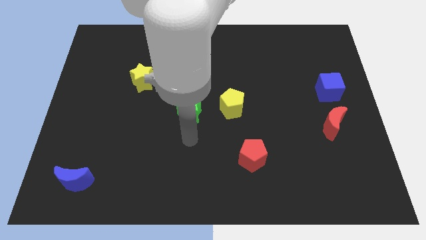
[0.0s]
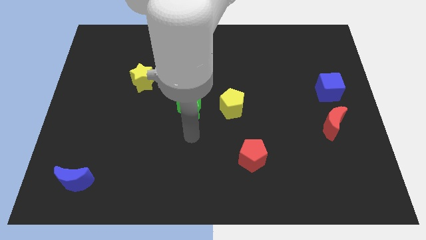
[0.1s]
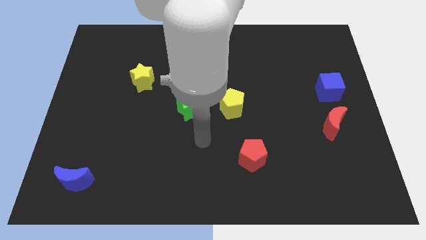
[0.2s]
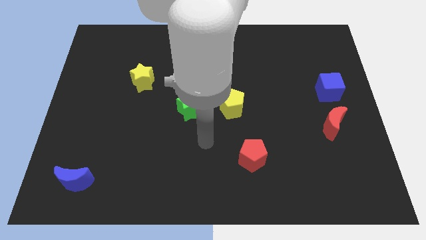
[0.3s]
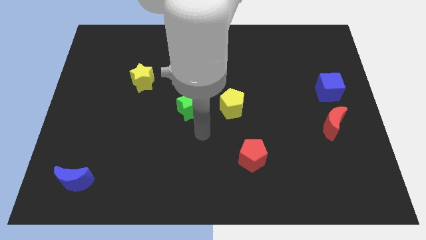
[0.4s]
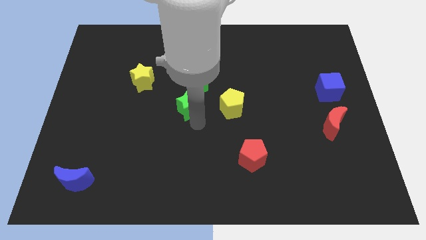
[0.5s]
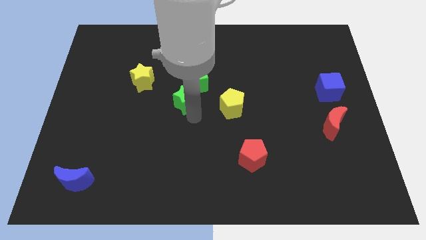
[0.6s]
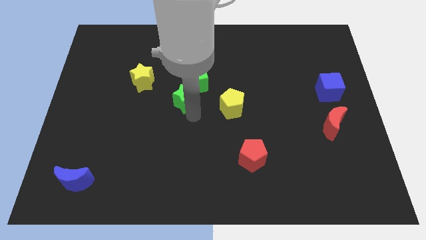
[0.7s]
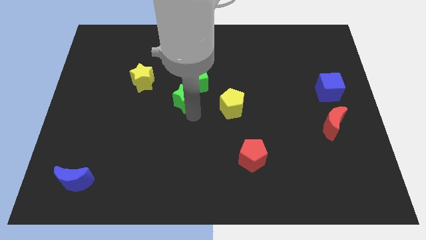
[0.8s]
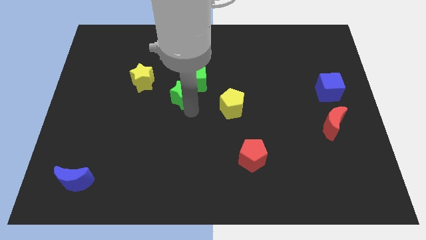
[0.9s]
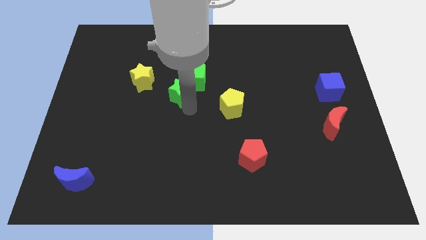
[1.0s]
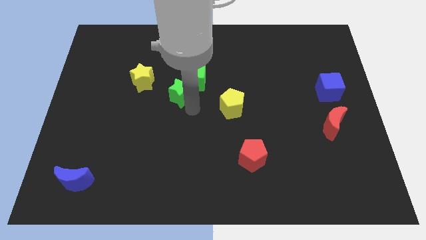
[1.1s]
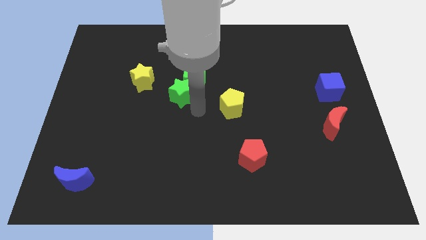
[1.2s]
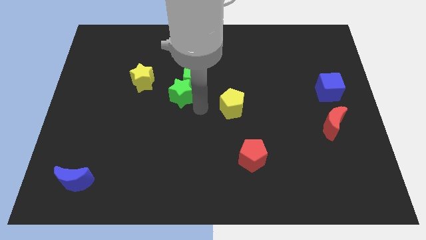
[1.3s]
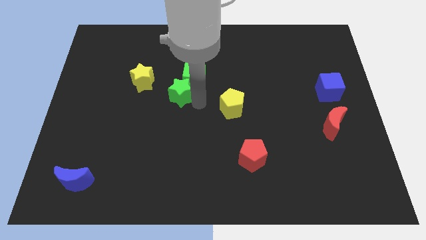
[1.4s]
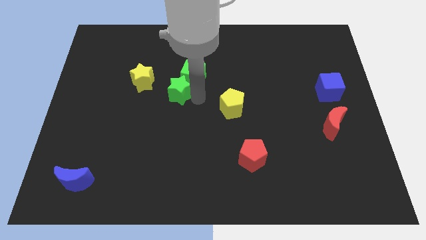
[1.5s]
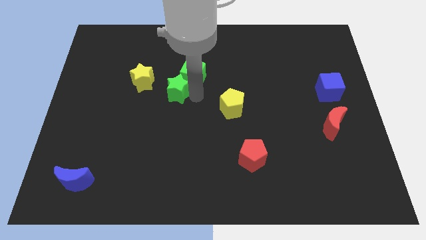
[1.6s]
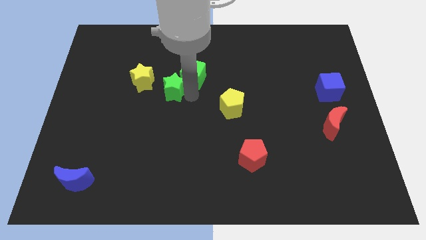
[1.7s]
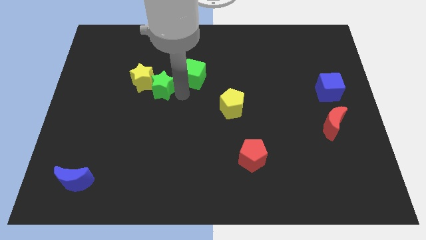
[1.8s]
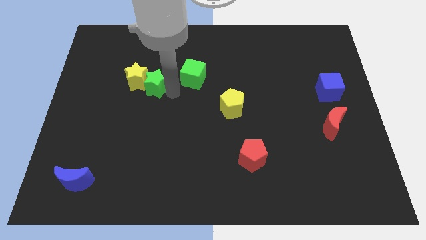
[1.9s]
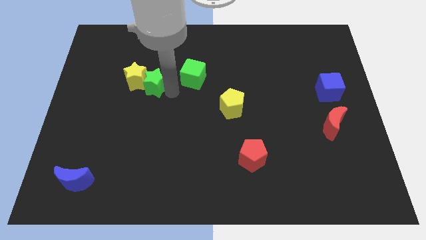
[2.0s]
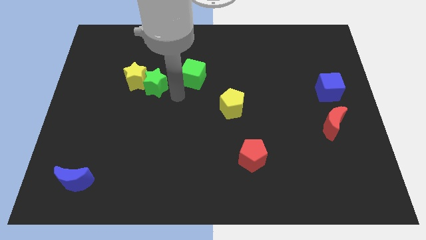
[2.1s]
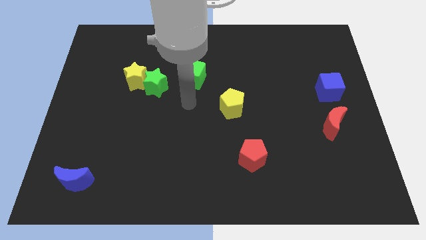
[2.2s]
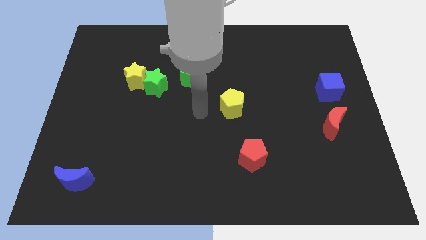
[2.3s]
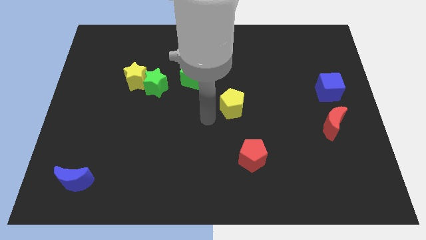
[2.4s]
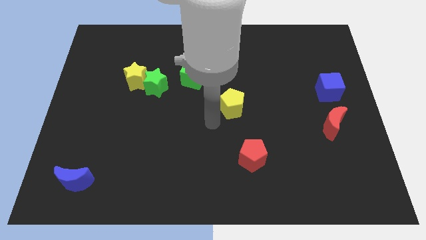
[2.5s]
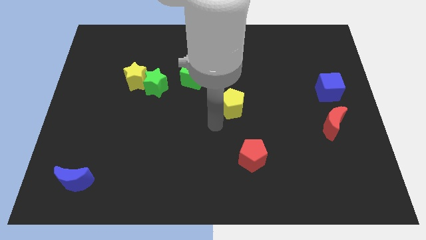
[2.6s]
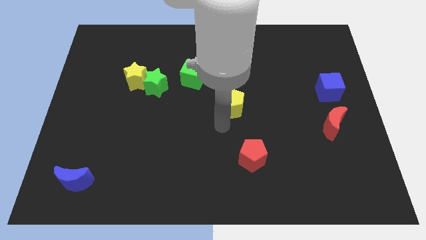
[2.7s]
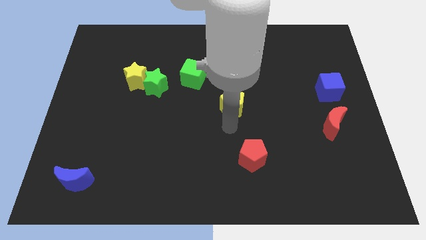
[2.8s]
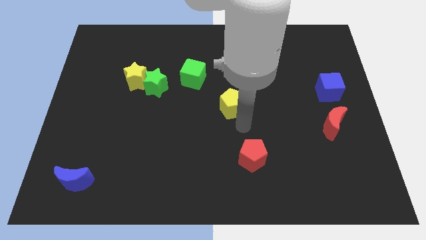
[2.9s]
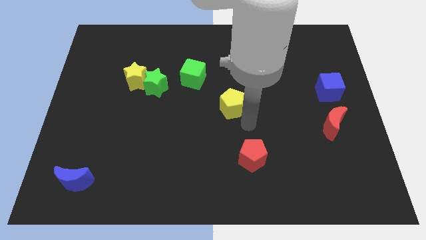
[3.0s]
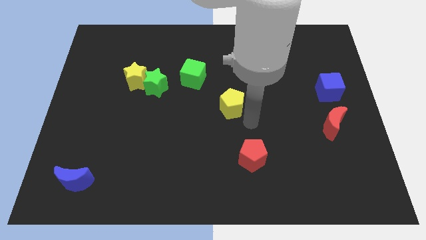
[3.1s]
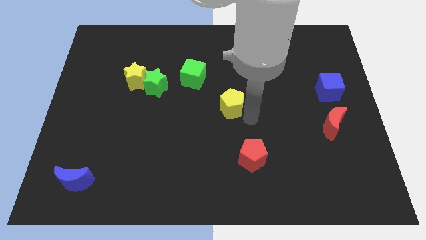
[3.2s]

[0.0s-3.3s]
move the green star to the right side of the yellow star

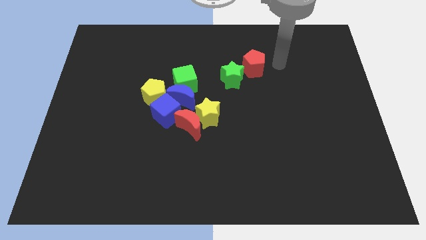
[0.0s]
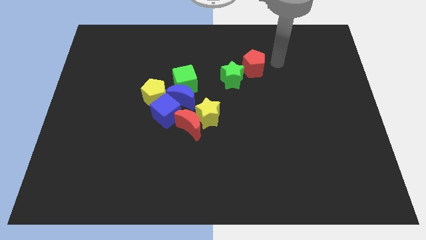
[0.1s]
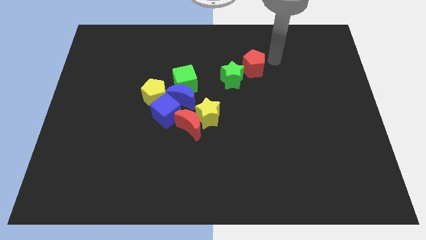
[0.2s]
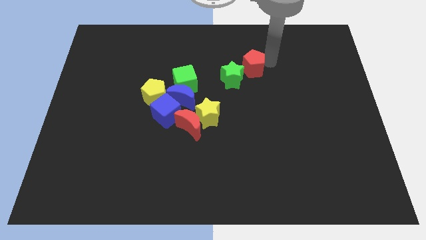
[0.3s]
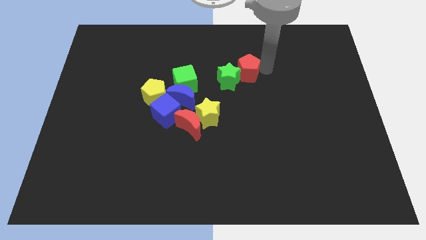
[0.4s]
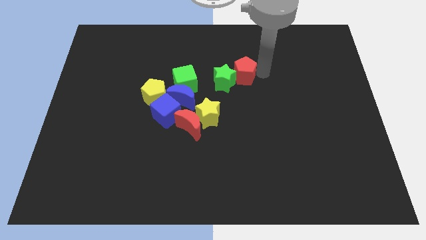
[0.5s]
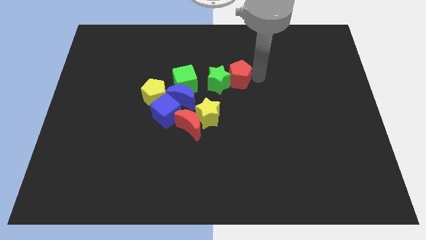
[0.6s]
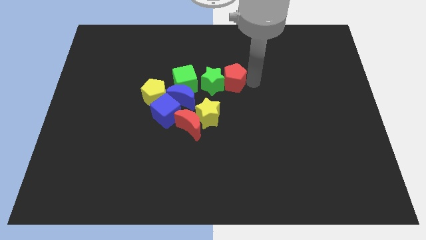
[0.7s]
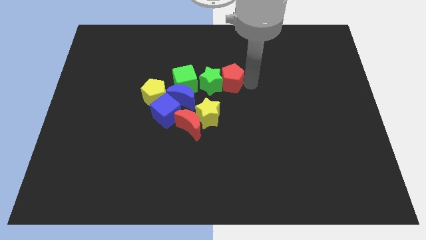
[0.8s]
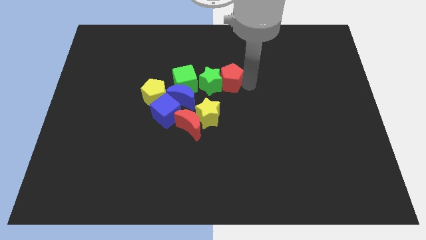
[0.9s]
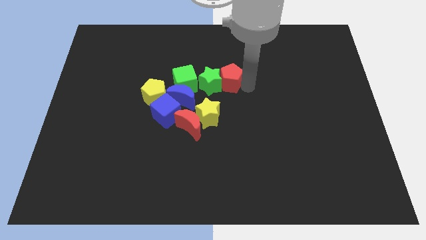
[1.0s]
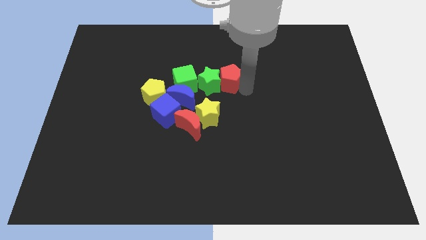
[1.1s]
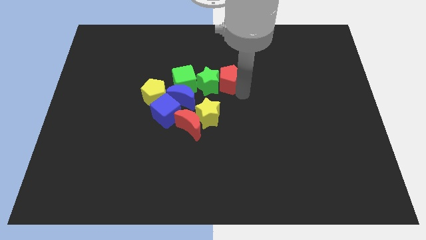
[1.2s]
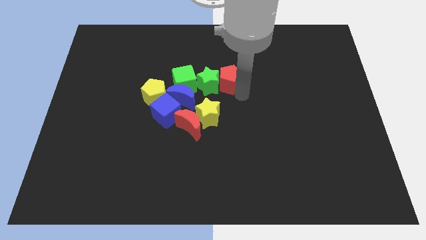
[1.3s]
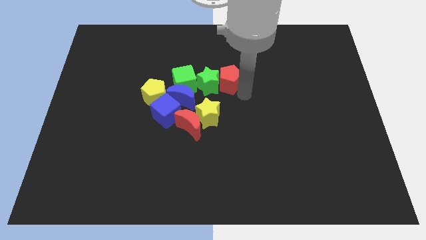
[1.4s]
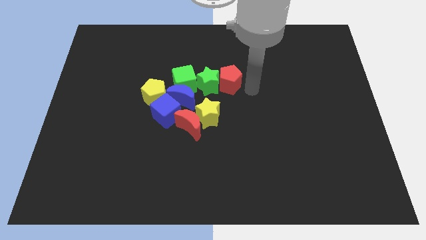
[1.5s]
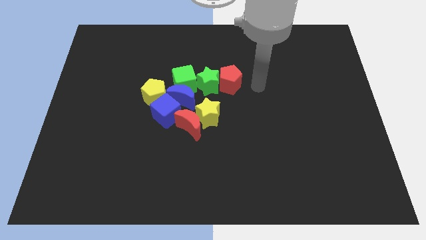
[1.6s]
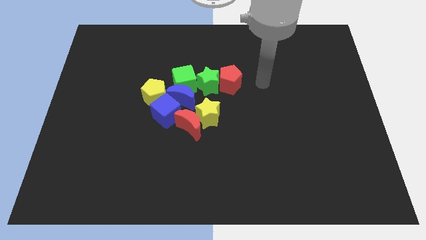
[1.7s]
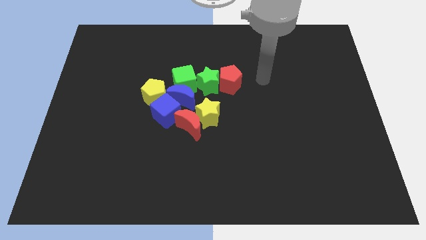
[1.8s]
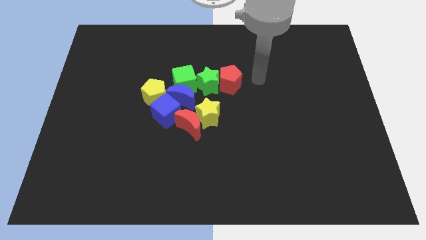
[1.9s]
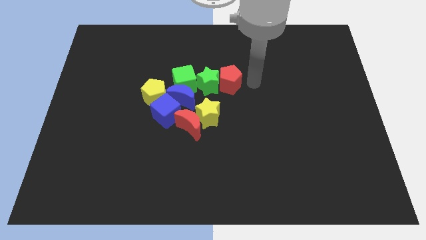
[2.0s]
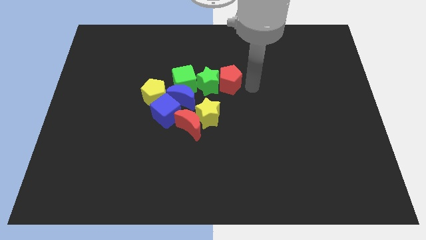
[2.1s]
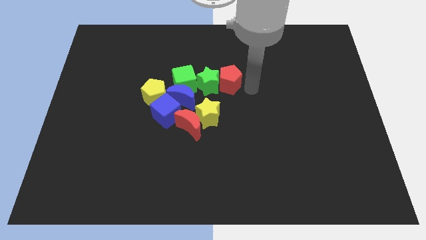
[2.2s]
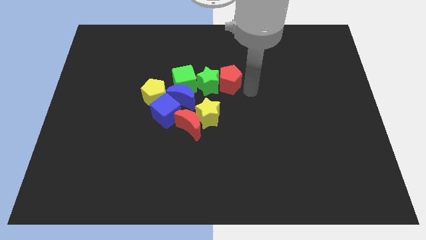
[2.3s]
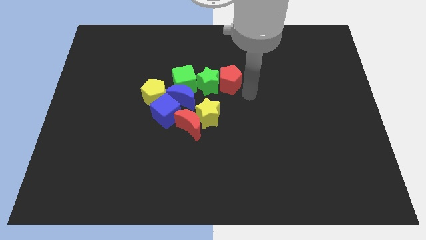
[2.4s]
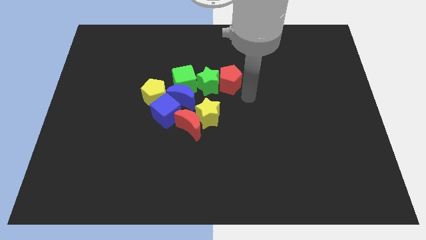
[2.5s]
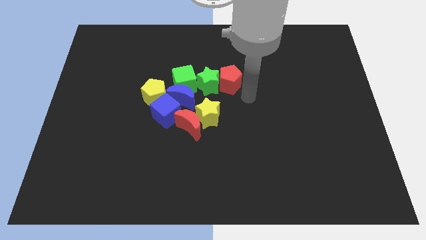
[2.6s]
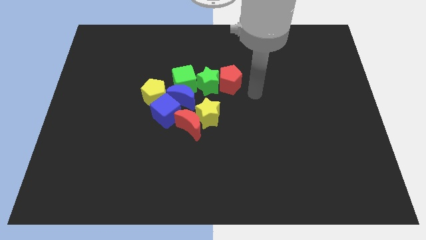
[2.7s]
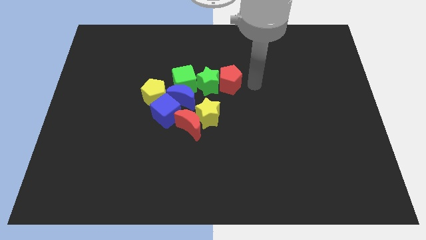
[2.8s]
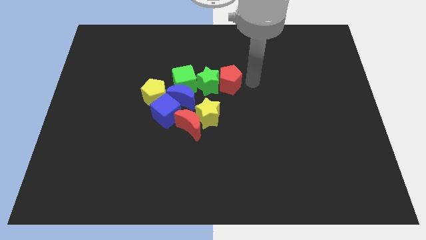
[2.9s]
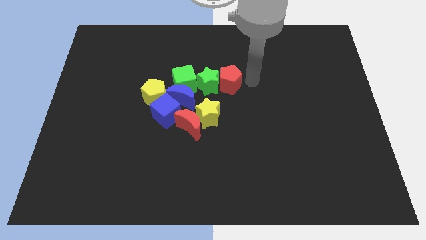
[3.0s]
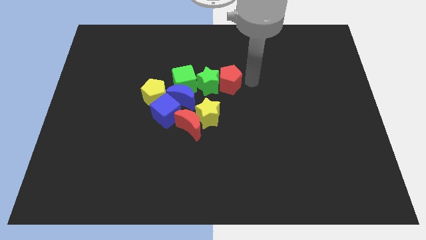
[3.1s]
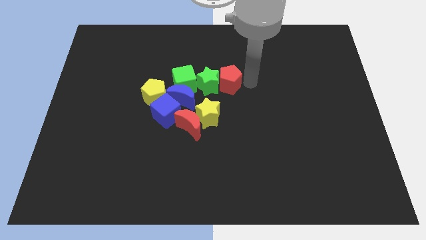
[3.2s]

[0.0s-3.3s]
move the green star and red pentagon to the right of the green cube

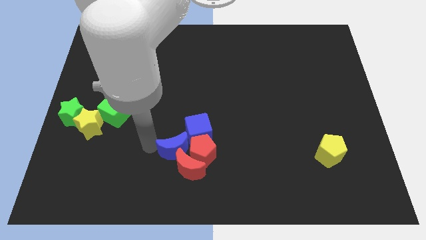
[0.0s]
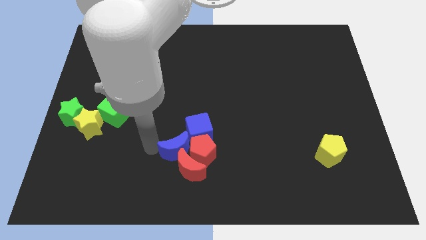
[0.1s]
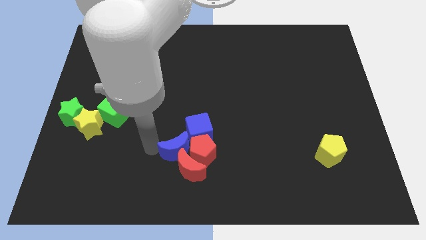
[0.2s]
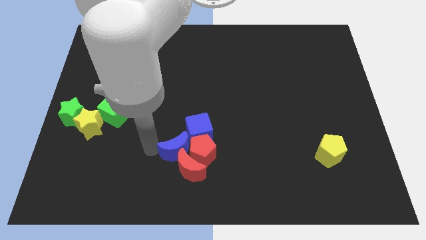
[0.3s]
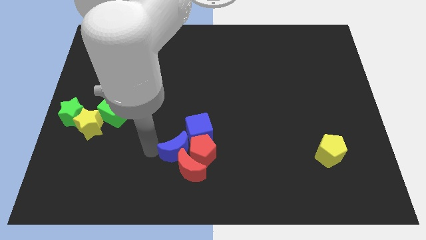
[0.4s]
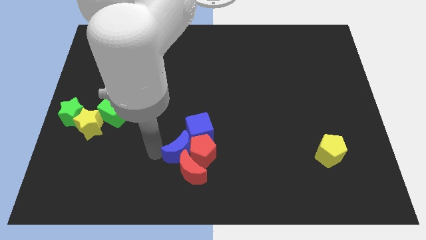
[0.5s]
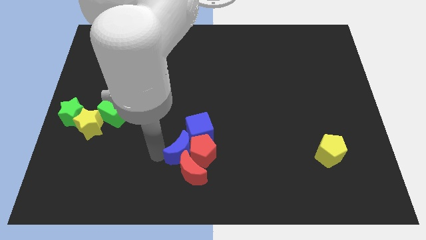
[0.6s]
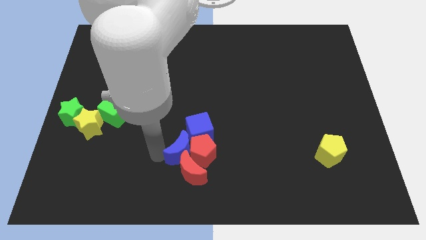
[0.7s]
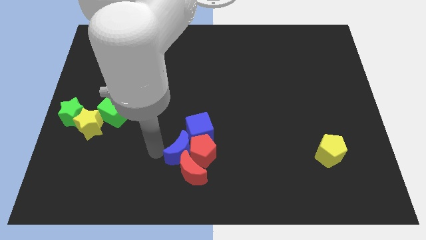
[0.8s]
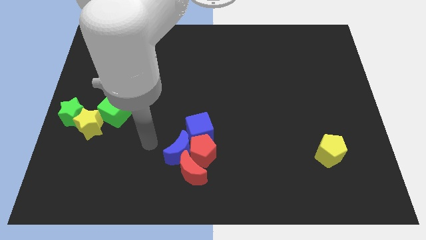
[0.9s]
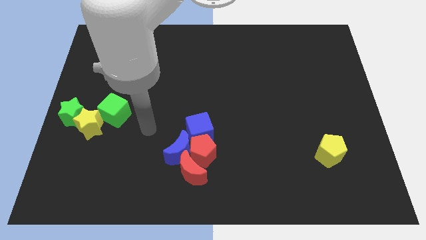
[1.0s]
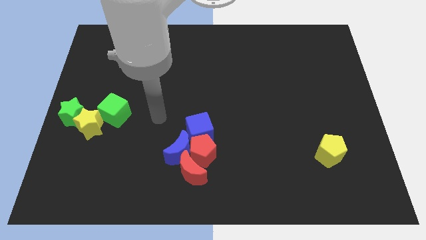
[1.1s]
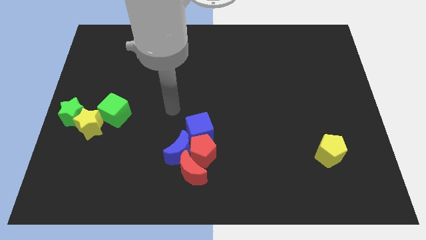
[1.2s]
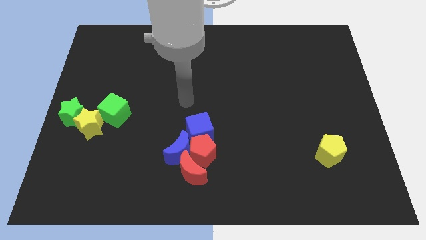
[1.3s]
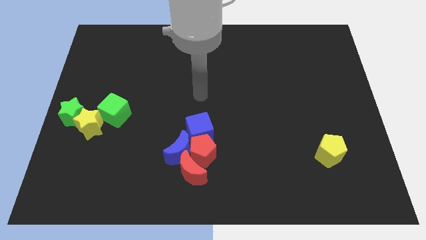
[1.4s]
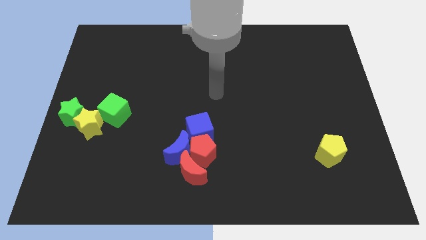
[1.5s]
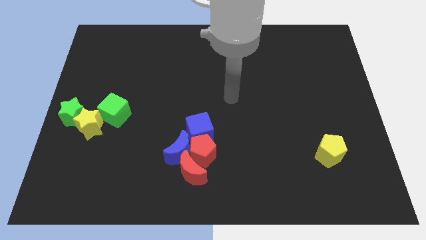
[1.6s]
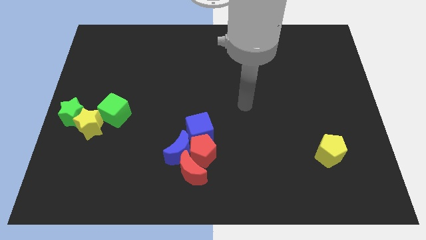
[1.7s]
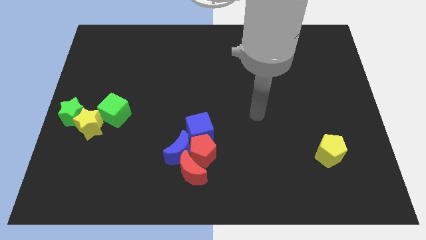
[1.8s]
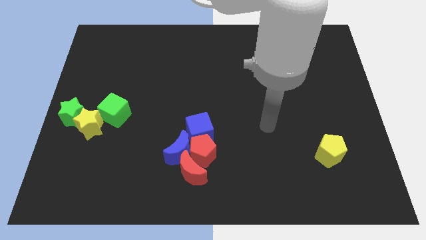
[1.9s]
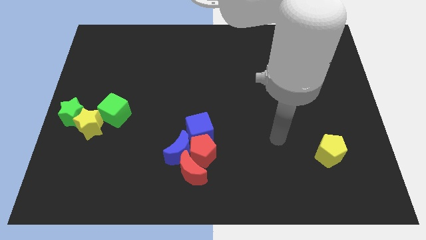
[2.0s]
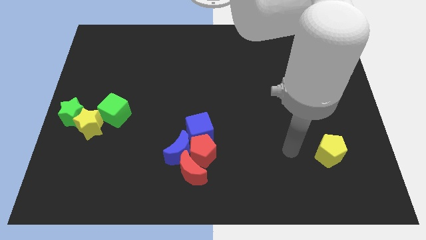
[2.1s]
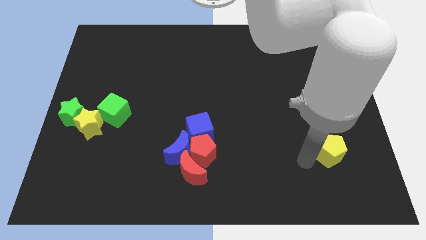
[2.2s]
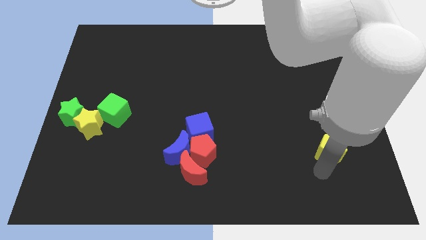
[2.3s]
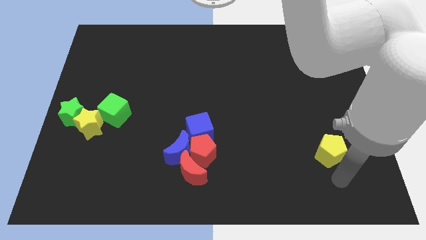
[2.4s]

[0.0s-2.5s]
move your arm to the bottom of the yellow pentagon
